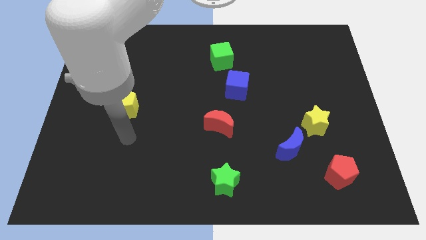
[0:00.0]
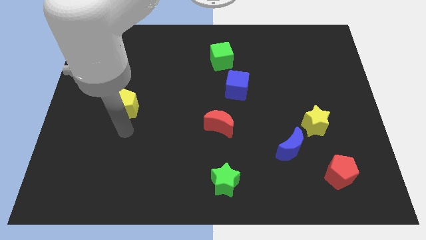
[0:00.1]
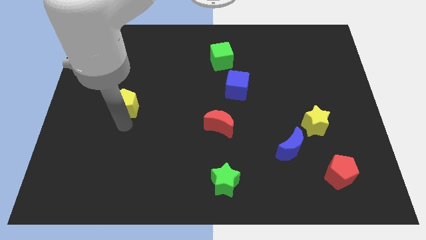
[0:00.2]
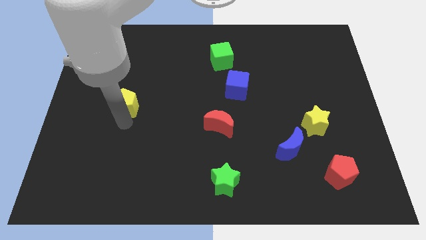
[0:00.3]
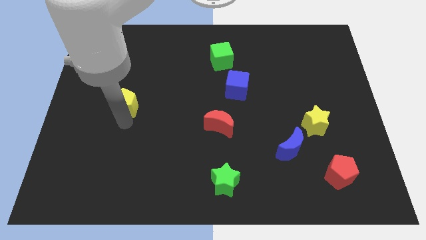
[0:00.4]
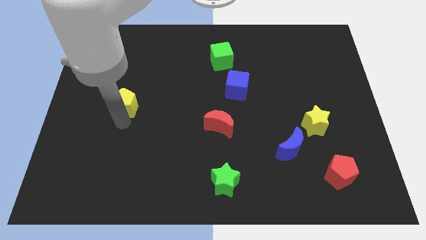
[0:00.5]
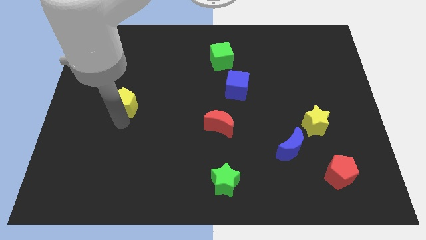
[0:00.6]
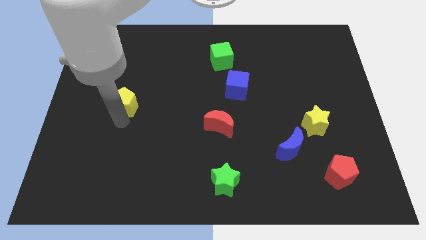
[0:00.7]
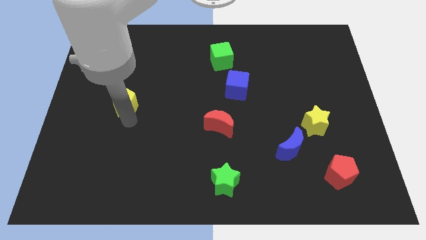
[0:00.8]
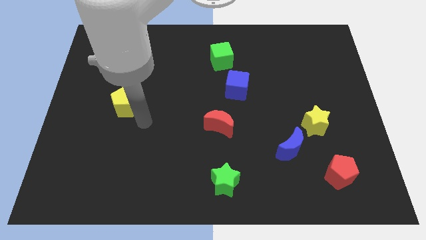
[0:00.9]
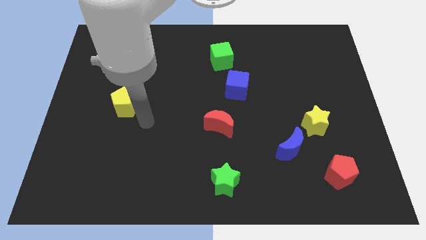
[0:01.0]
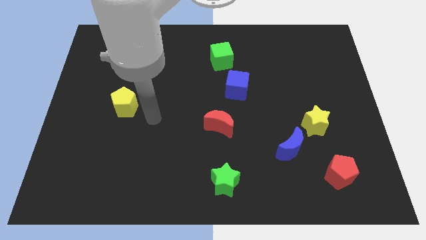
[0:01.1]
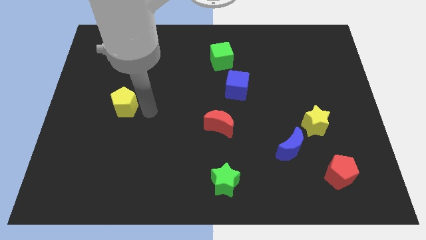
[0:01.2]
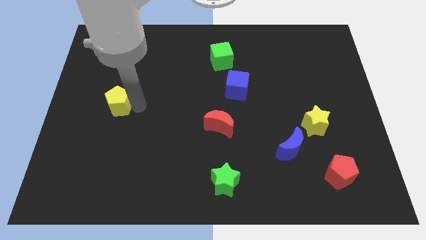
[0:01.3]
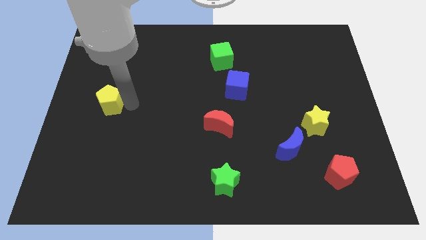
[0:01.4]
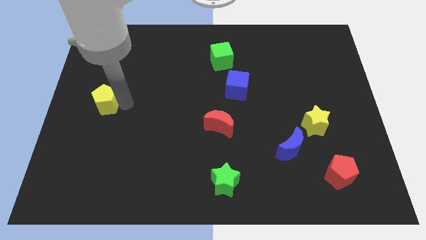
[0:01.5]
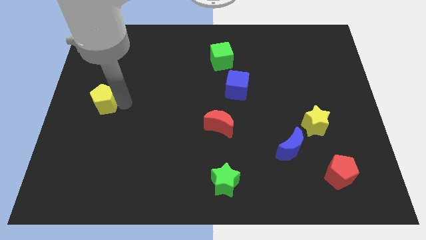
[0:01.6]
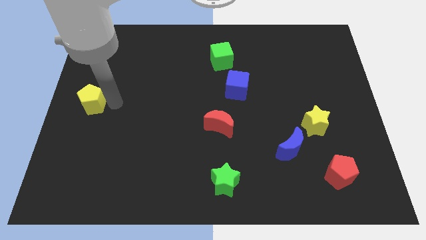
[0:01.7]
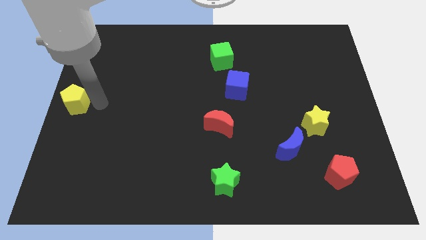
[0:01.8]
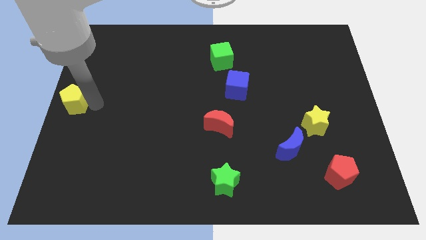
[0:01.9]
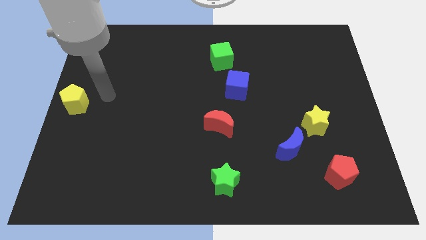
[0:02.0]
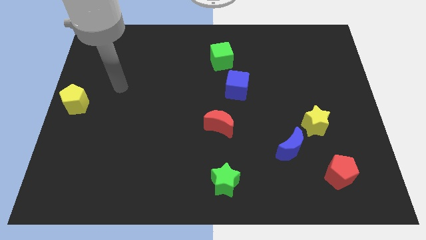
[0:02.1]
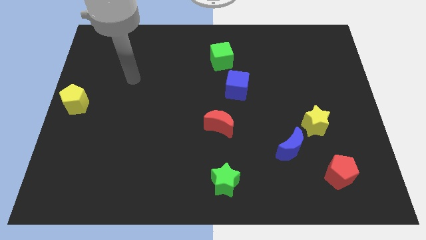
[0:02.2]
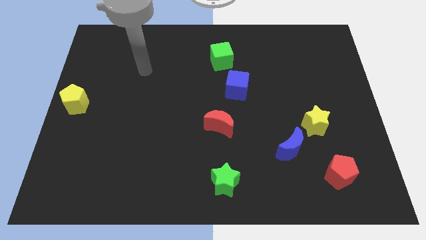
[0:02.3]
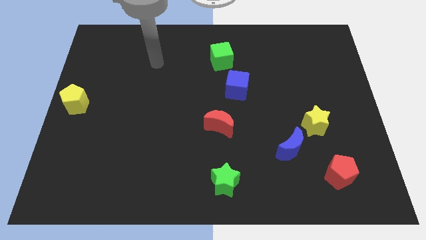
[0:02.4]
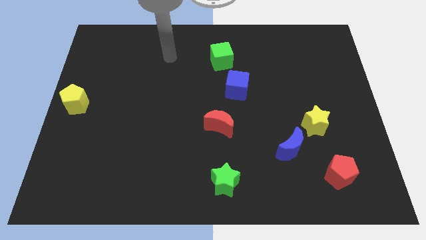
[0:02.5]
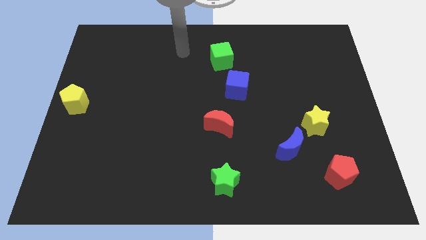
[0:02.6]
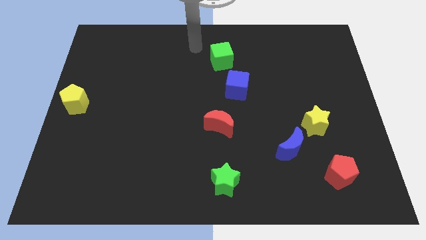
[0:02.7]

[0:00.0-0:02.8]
push yellow pentagon at center left

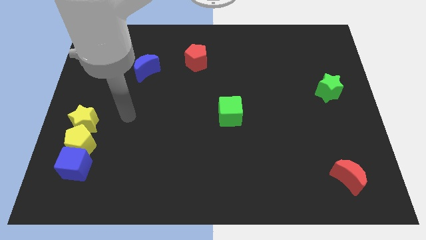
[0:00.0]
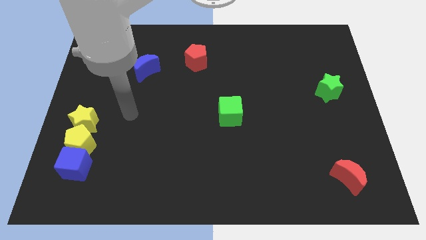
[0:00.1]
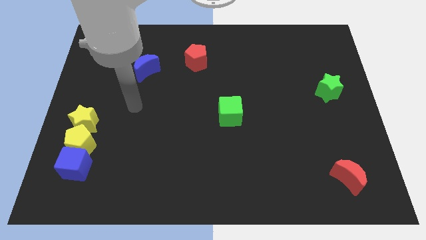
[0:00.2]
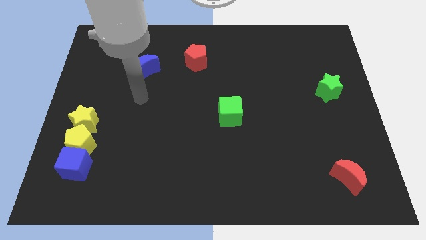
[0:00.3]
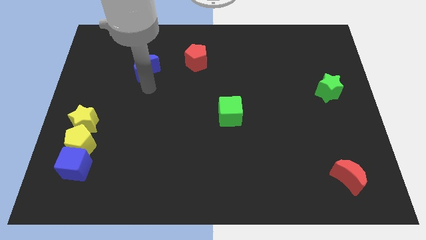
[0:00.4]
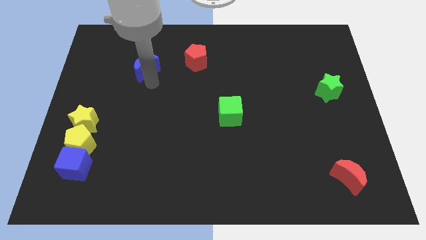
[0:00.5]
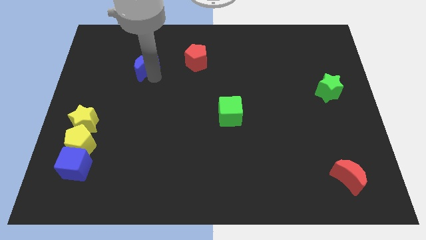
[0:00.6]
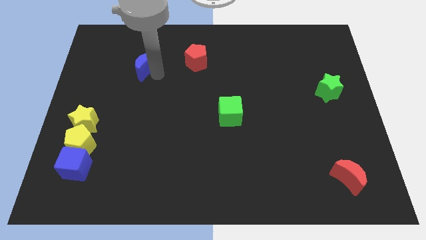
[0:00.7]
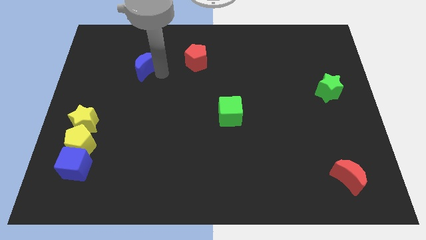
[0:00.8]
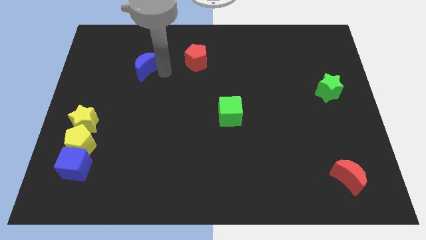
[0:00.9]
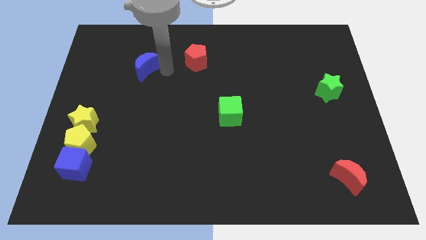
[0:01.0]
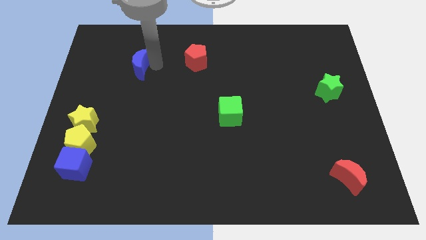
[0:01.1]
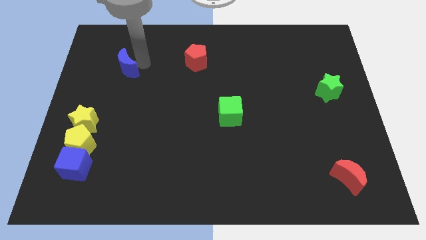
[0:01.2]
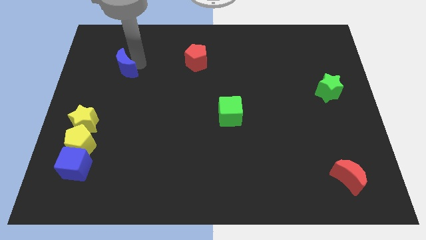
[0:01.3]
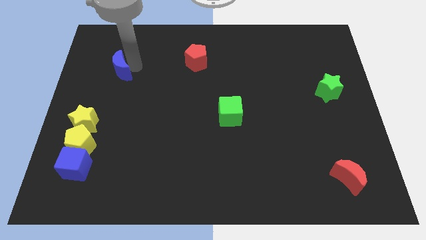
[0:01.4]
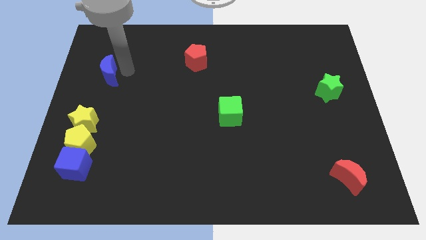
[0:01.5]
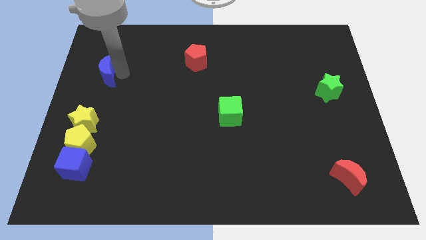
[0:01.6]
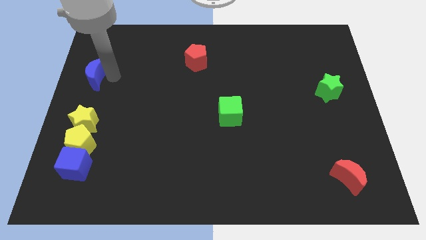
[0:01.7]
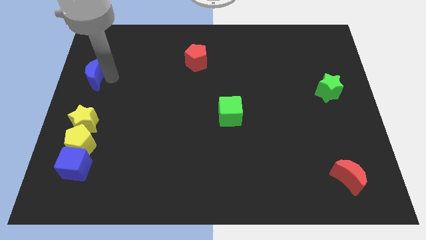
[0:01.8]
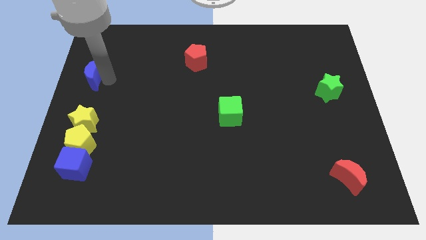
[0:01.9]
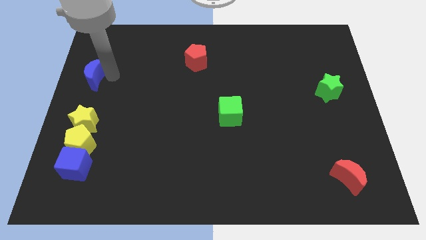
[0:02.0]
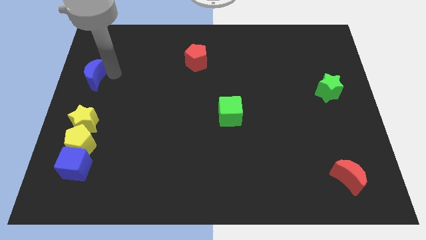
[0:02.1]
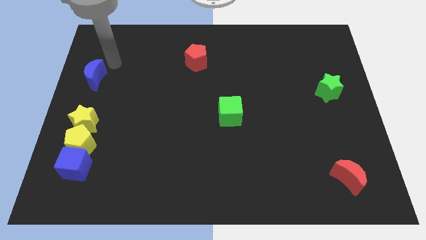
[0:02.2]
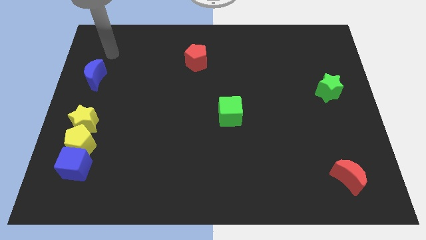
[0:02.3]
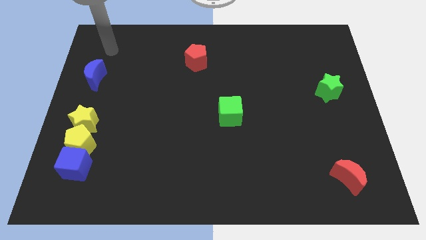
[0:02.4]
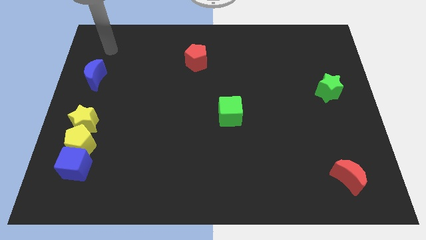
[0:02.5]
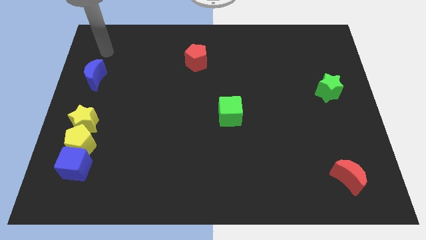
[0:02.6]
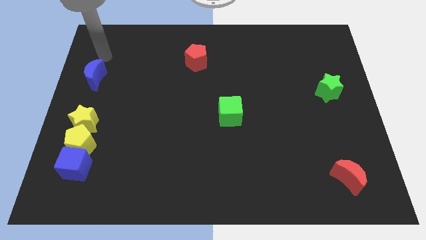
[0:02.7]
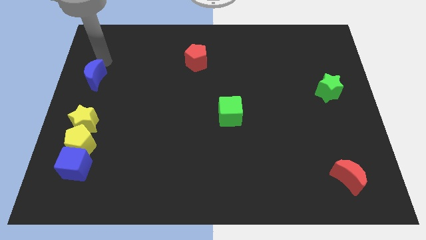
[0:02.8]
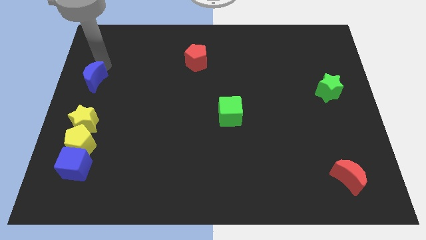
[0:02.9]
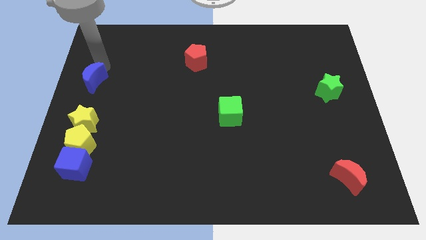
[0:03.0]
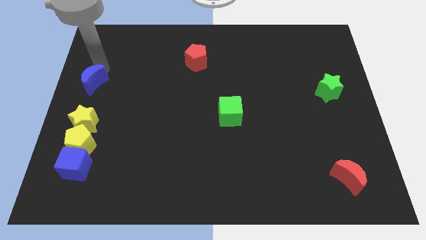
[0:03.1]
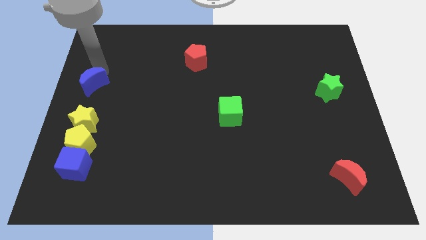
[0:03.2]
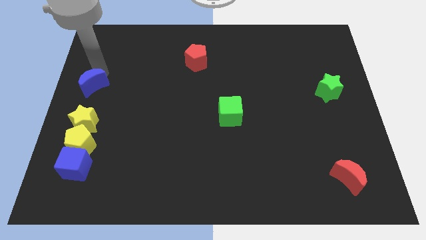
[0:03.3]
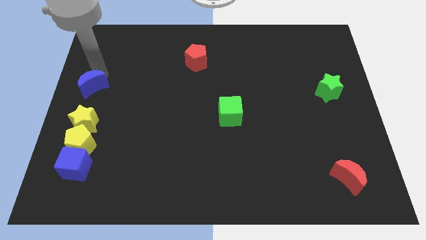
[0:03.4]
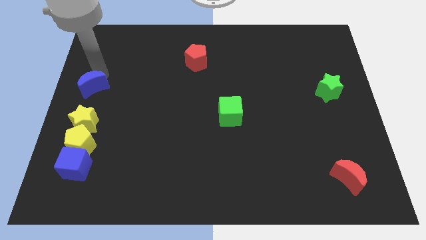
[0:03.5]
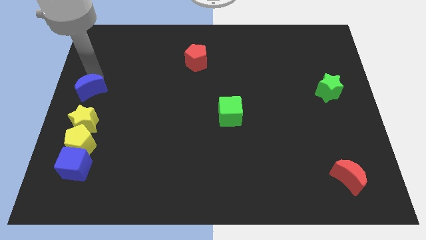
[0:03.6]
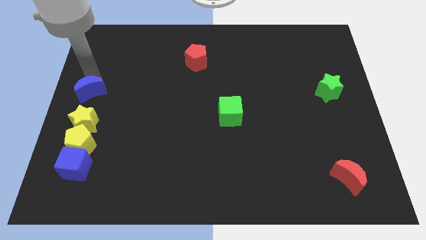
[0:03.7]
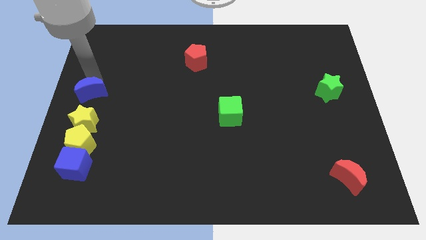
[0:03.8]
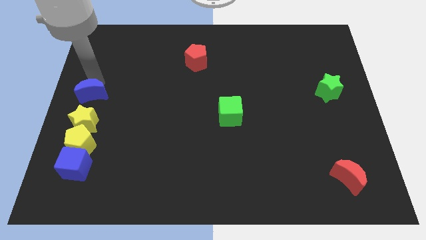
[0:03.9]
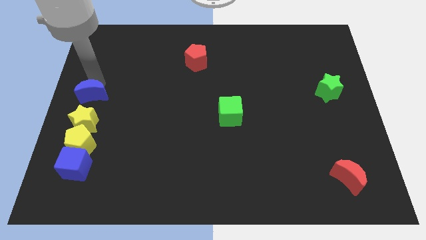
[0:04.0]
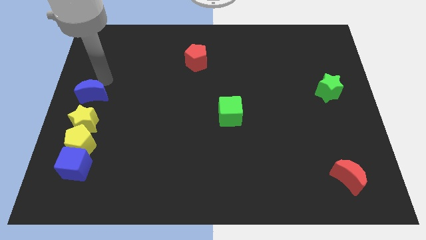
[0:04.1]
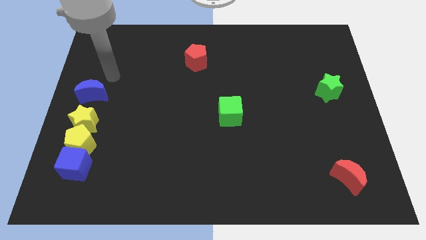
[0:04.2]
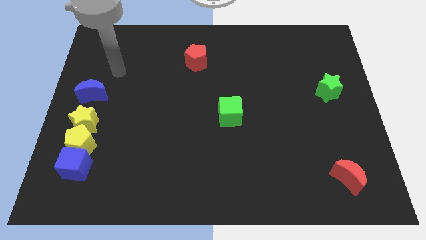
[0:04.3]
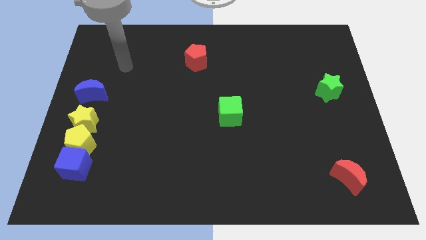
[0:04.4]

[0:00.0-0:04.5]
push the blue crescent to the top of the yellow star vertically from the top

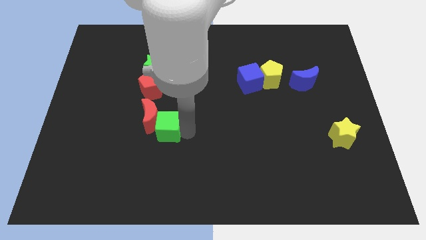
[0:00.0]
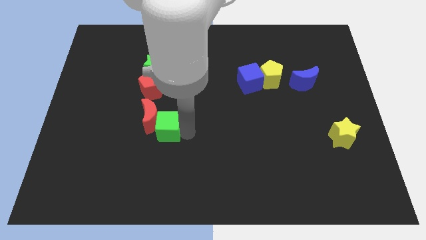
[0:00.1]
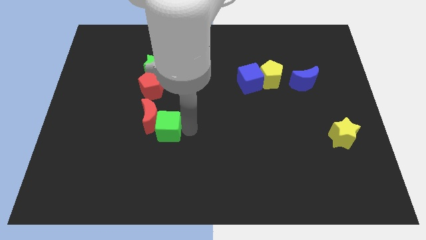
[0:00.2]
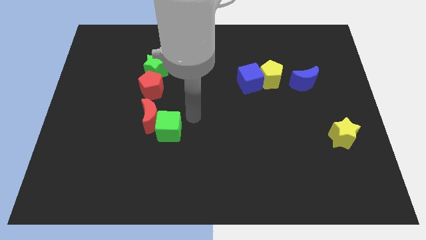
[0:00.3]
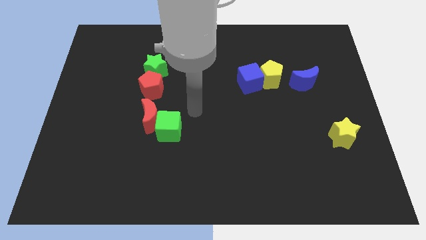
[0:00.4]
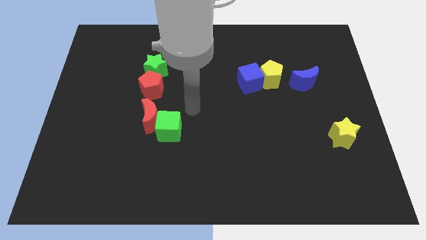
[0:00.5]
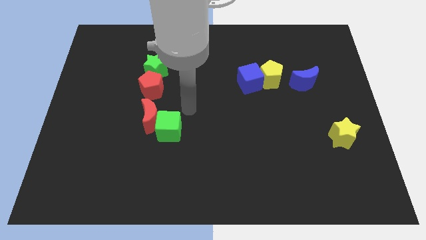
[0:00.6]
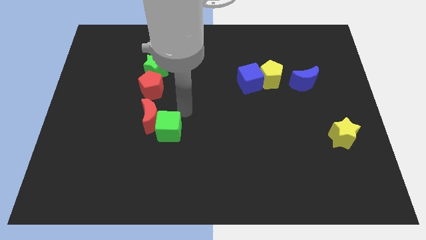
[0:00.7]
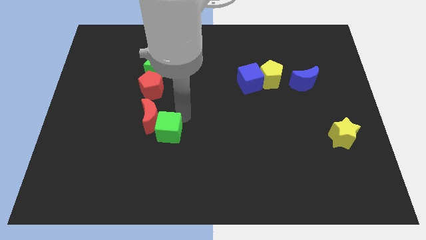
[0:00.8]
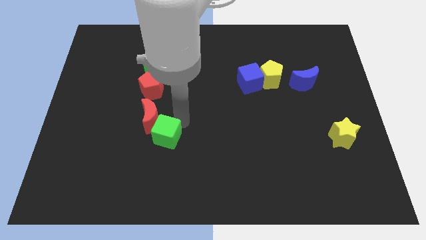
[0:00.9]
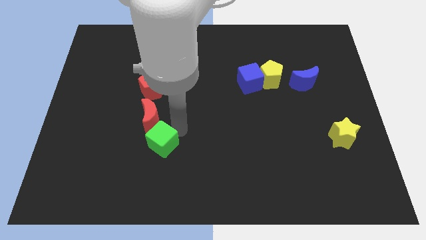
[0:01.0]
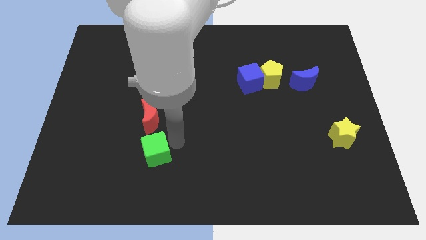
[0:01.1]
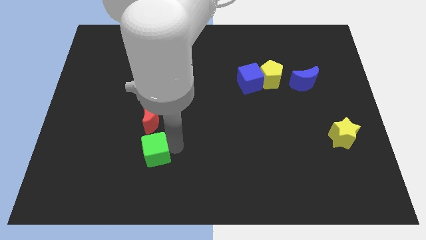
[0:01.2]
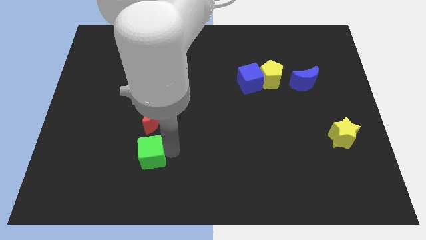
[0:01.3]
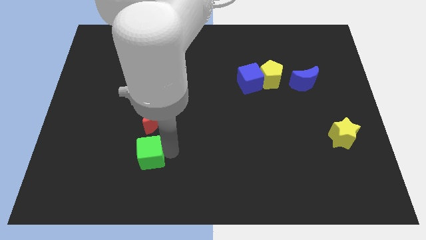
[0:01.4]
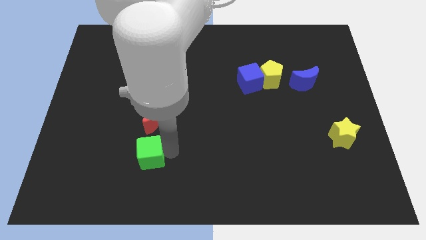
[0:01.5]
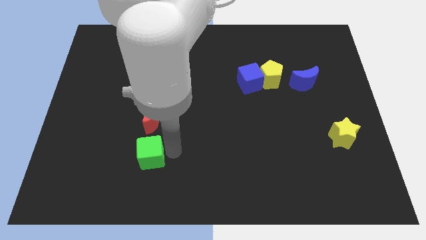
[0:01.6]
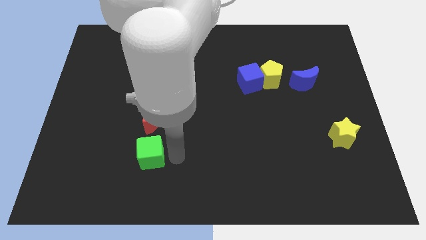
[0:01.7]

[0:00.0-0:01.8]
place green cube below red moon
